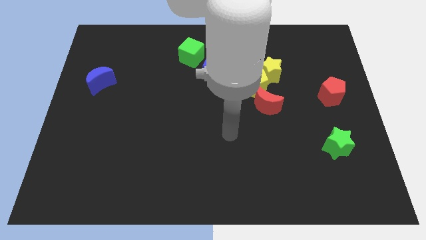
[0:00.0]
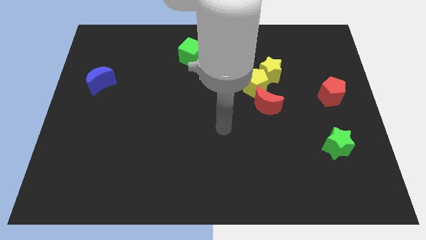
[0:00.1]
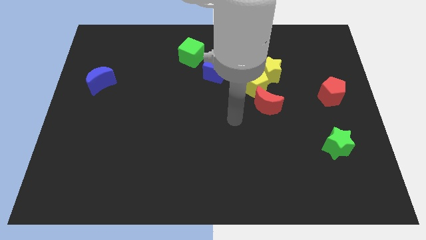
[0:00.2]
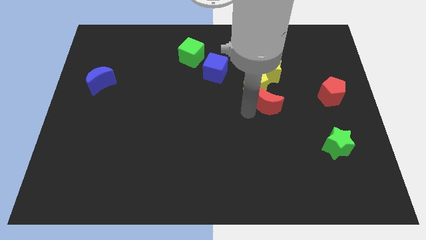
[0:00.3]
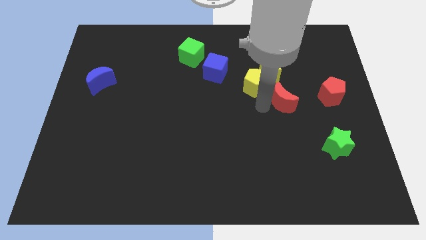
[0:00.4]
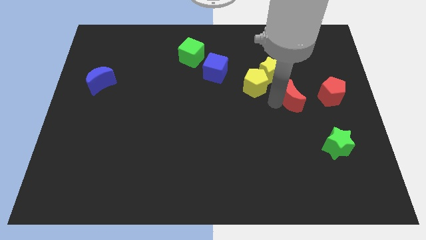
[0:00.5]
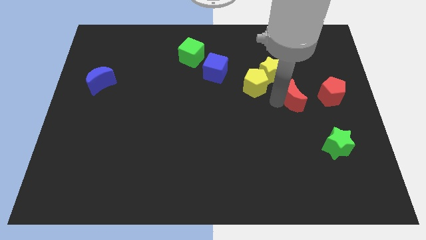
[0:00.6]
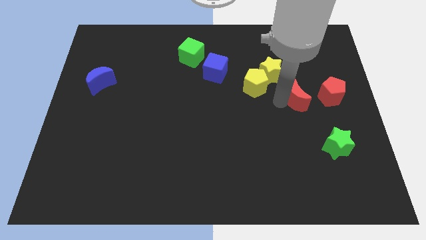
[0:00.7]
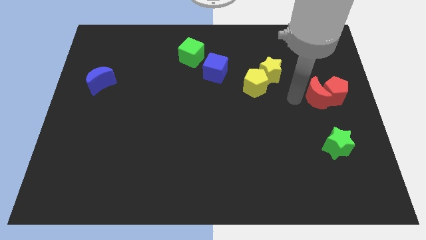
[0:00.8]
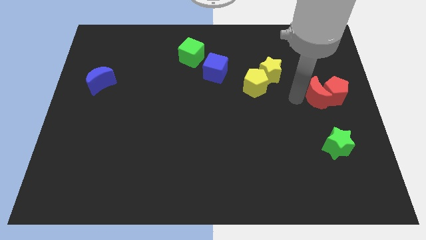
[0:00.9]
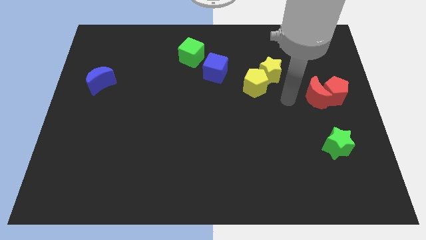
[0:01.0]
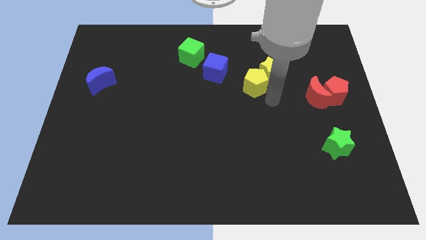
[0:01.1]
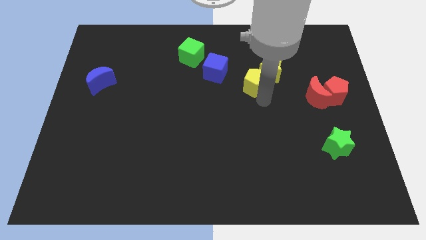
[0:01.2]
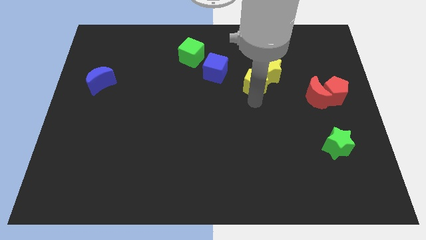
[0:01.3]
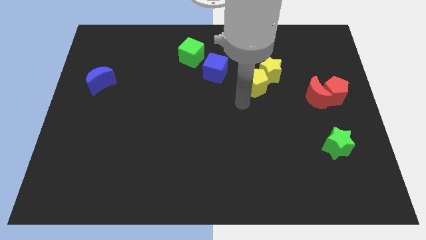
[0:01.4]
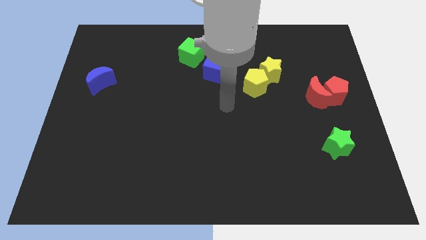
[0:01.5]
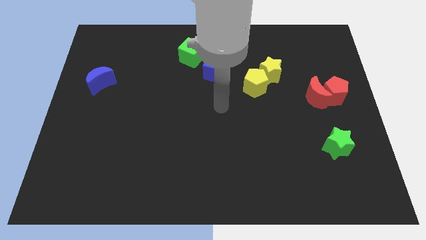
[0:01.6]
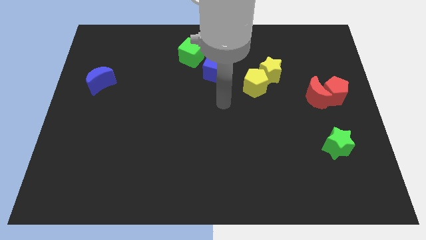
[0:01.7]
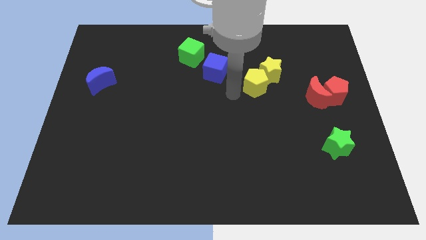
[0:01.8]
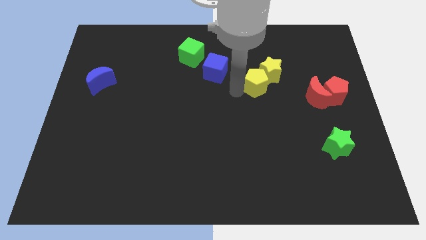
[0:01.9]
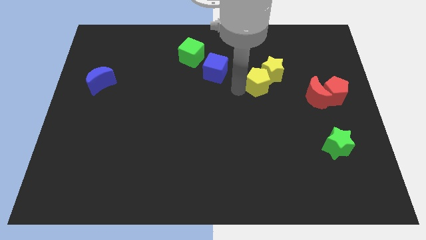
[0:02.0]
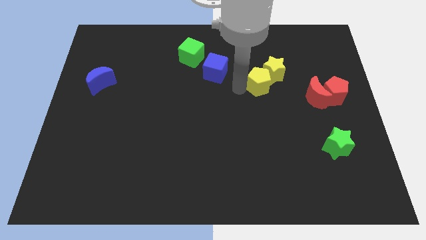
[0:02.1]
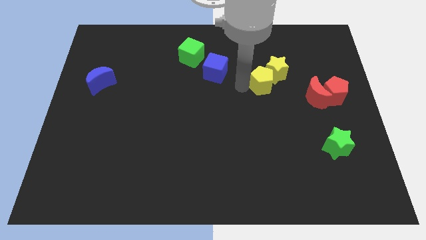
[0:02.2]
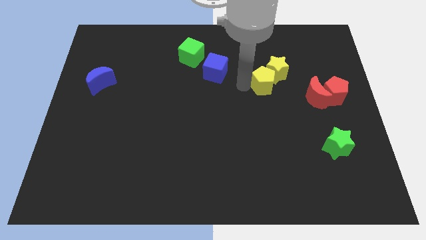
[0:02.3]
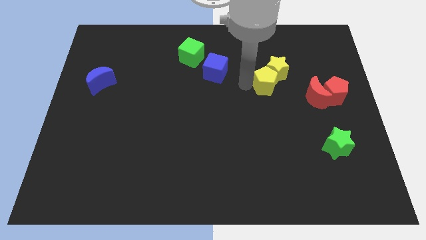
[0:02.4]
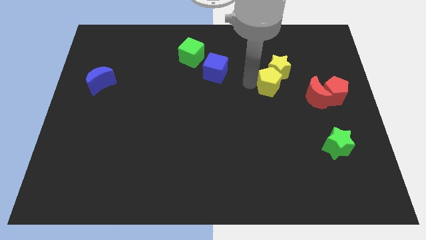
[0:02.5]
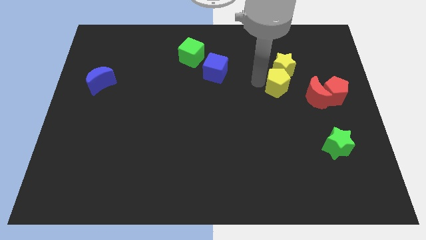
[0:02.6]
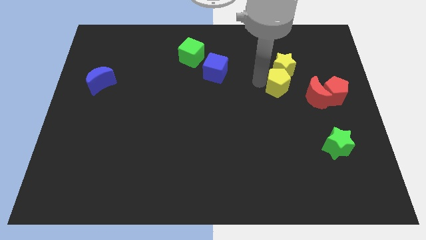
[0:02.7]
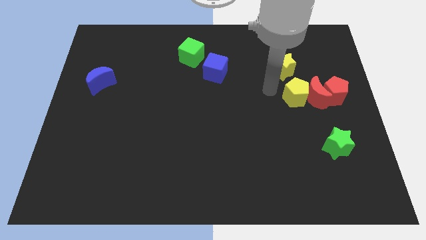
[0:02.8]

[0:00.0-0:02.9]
place yellow pentagon below yellow star

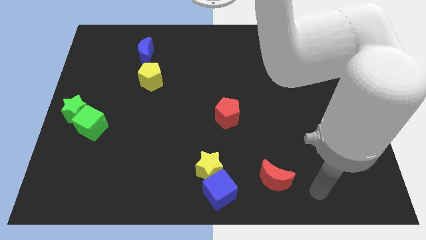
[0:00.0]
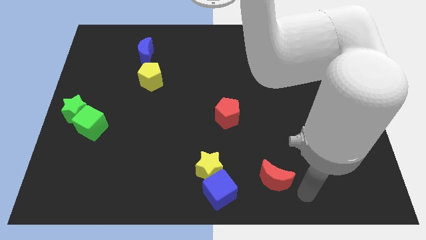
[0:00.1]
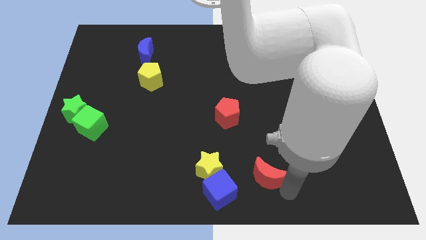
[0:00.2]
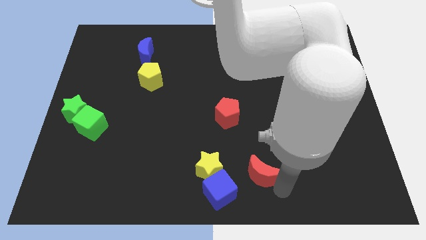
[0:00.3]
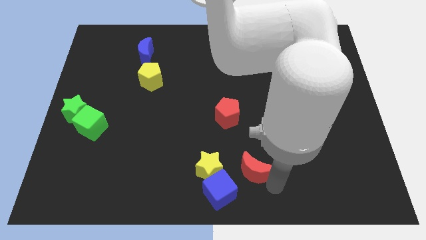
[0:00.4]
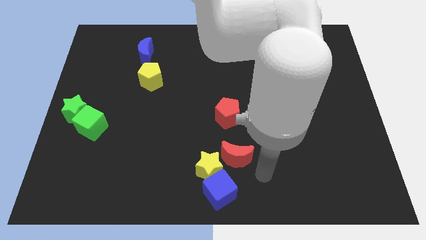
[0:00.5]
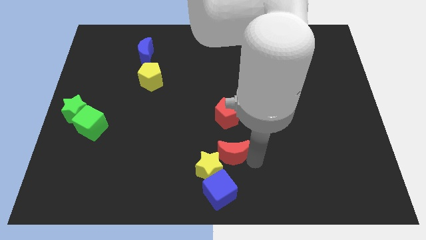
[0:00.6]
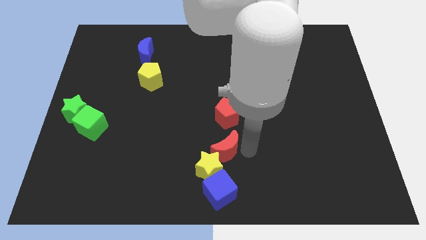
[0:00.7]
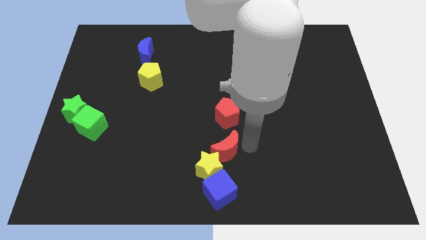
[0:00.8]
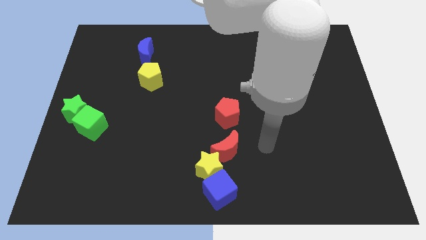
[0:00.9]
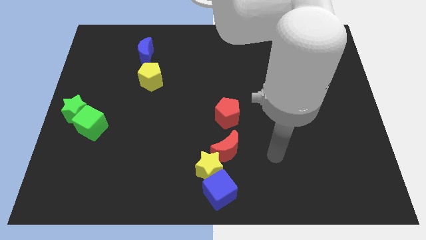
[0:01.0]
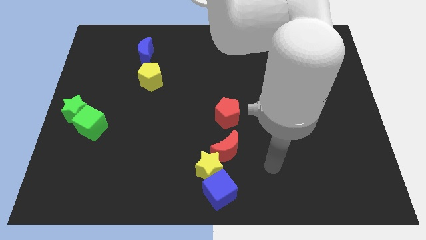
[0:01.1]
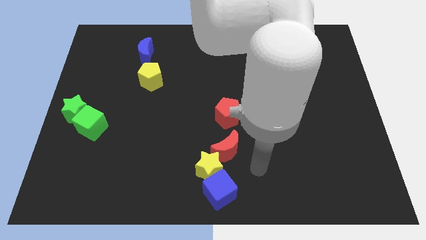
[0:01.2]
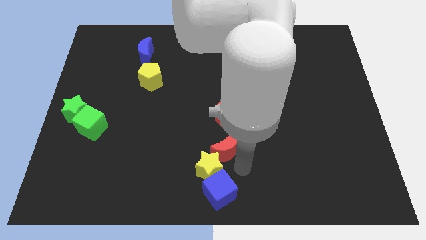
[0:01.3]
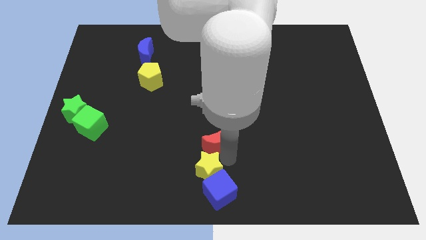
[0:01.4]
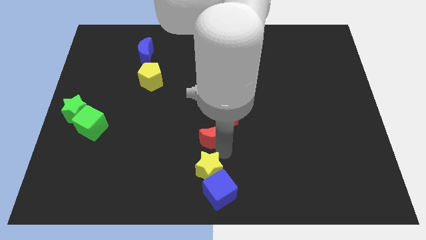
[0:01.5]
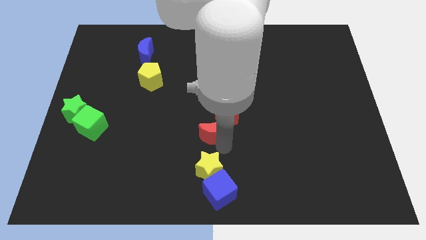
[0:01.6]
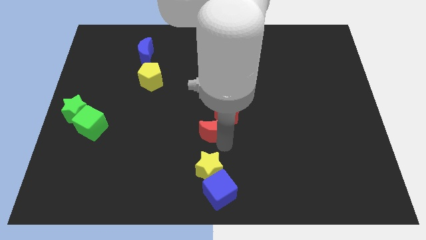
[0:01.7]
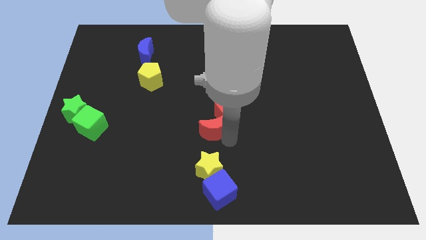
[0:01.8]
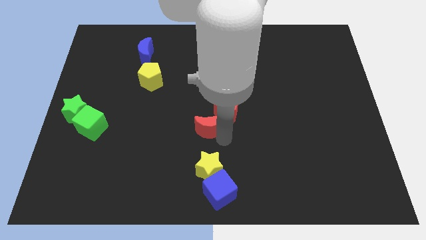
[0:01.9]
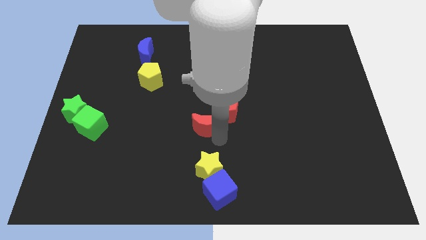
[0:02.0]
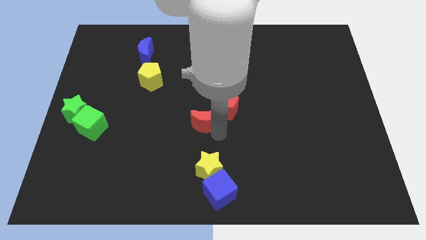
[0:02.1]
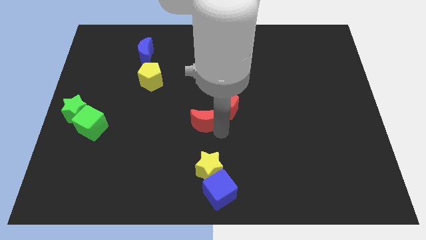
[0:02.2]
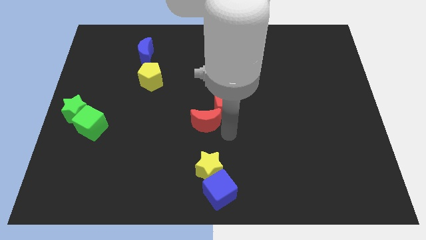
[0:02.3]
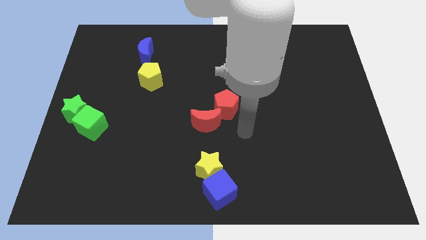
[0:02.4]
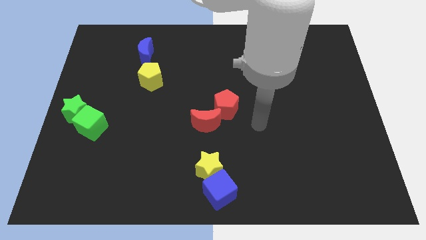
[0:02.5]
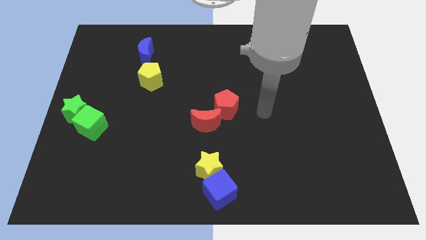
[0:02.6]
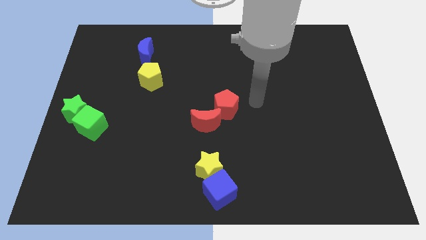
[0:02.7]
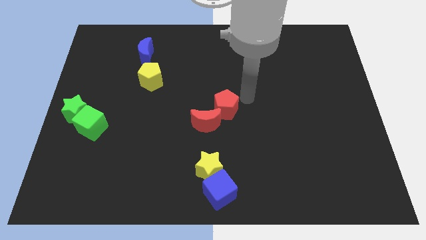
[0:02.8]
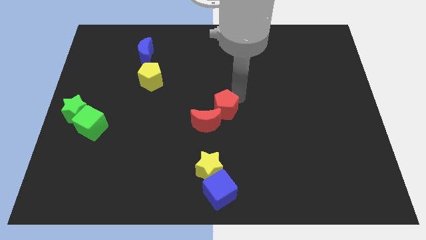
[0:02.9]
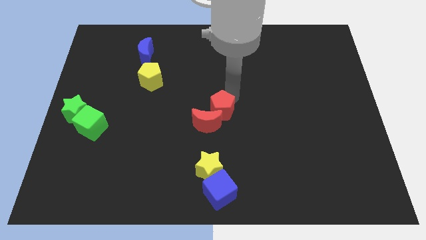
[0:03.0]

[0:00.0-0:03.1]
place the red moon into the red pentagon

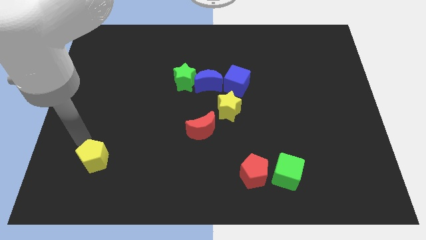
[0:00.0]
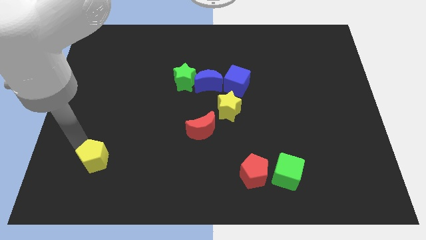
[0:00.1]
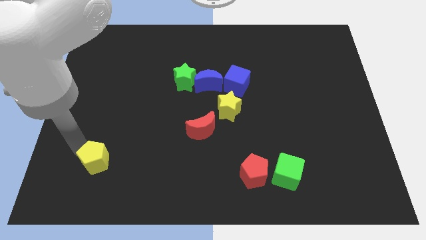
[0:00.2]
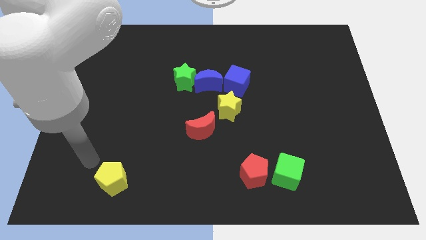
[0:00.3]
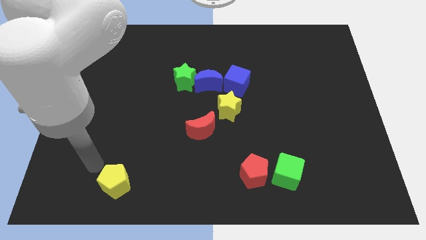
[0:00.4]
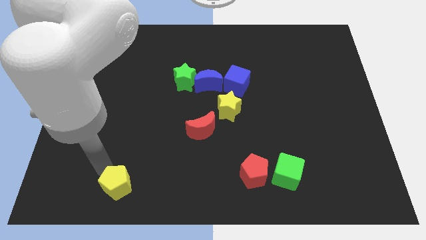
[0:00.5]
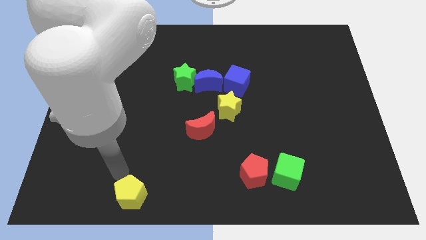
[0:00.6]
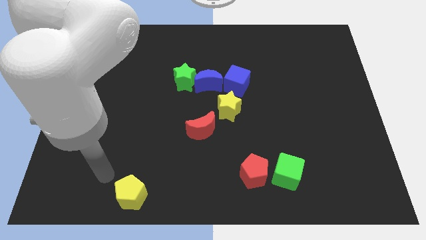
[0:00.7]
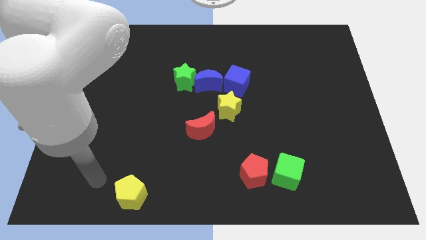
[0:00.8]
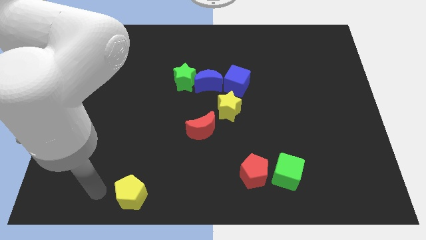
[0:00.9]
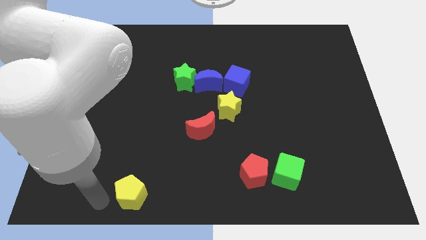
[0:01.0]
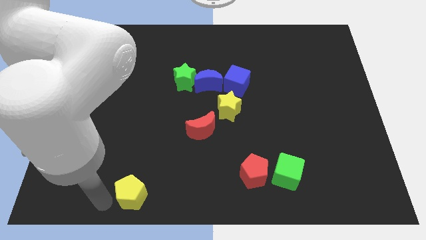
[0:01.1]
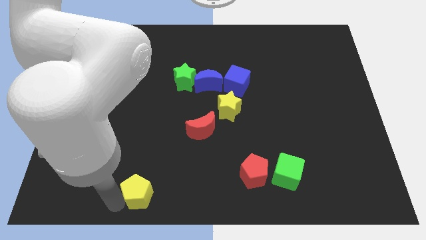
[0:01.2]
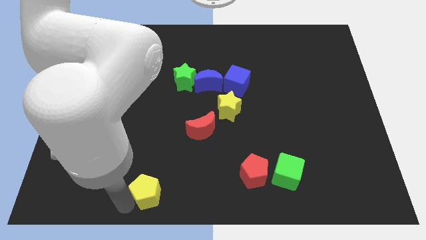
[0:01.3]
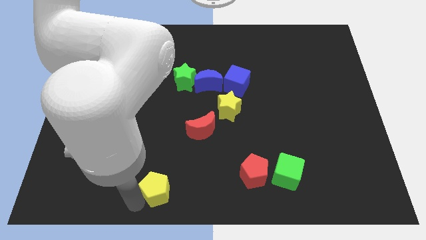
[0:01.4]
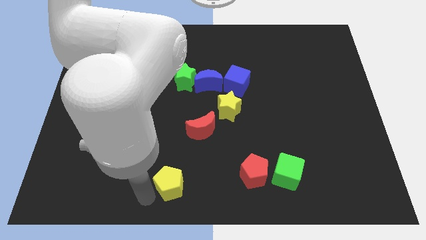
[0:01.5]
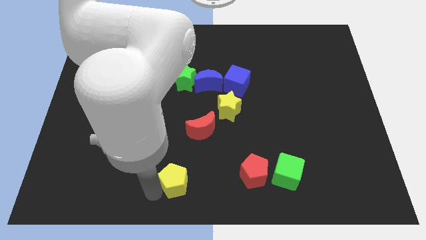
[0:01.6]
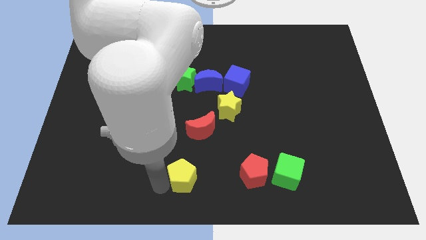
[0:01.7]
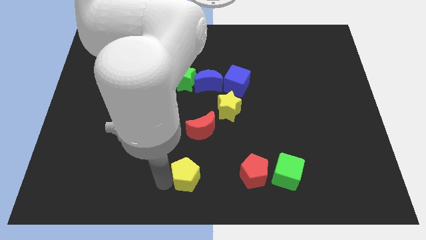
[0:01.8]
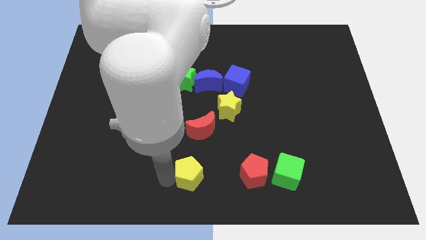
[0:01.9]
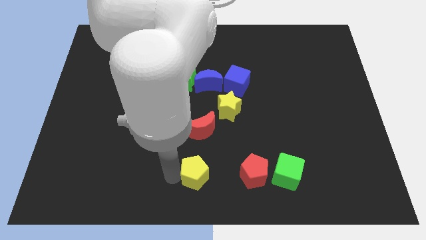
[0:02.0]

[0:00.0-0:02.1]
place yellow pentagon to the left of red pentagon

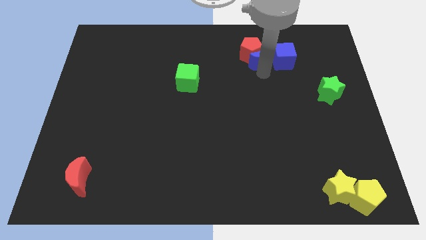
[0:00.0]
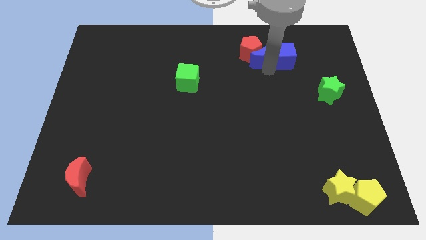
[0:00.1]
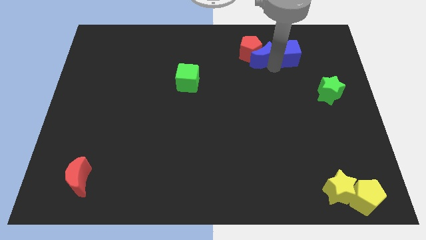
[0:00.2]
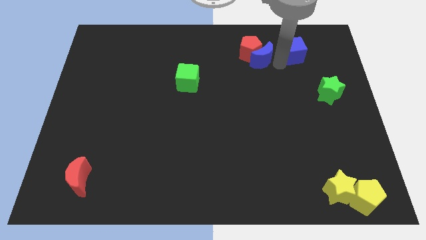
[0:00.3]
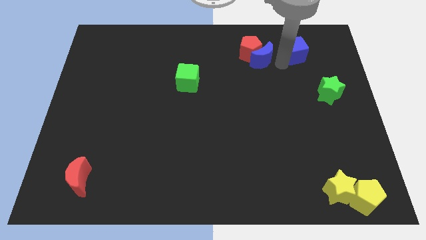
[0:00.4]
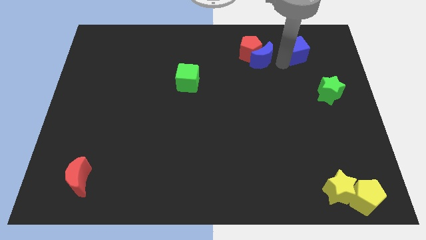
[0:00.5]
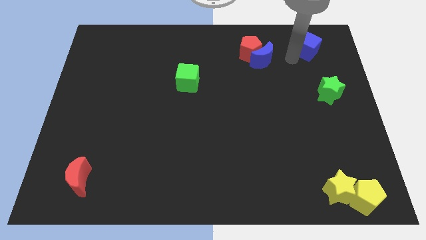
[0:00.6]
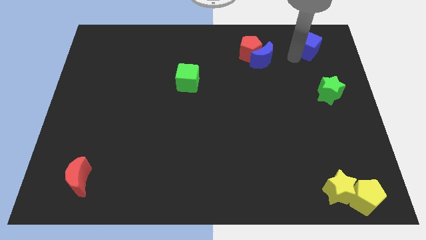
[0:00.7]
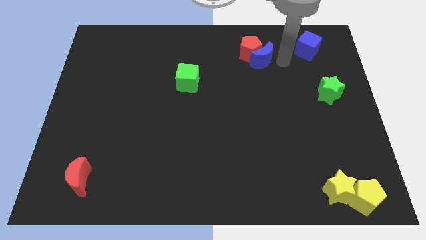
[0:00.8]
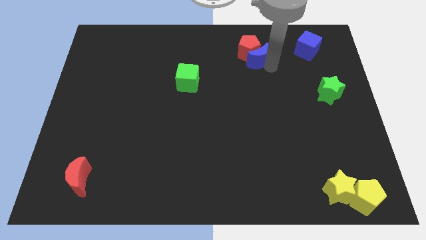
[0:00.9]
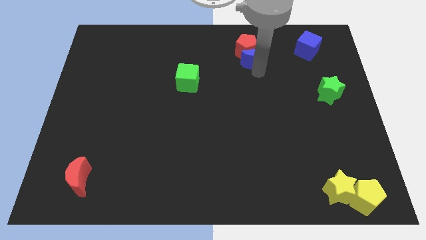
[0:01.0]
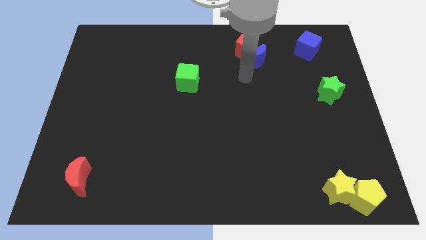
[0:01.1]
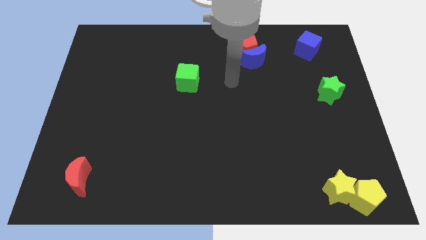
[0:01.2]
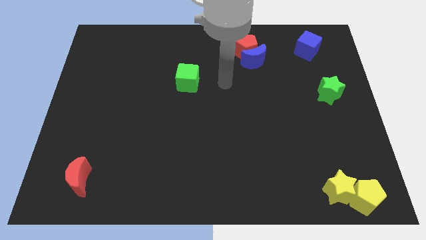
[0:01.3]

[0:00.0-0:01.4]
place the blue cube above the green star
